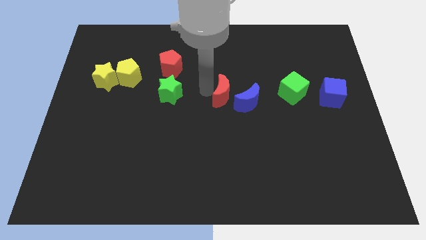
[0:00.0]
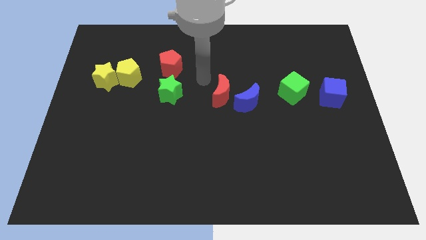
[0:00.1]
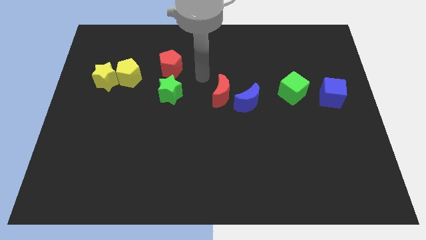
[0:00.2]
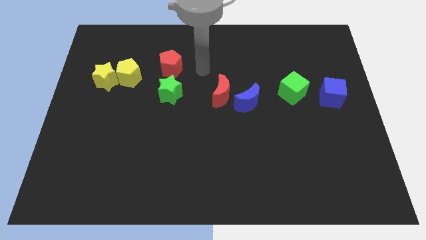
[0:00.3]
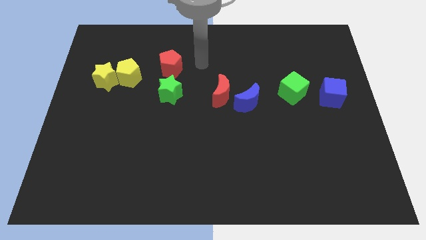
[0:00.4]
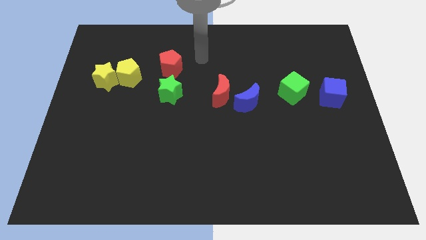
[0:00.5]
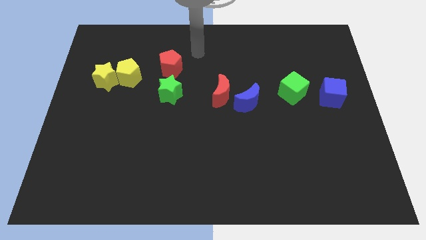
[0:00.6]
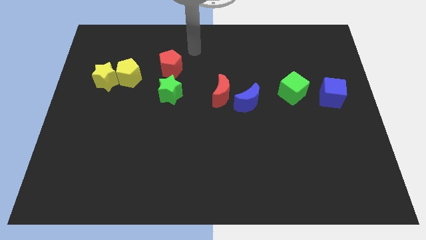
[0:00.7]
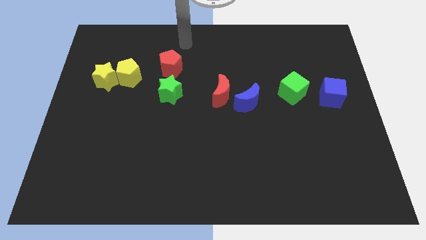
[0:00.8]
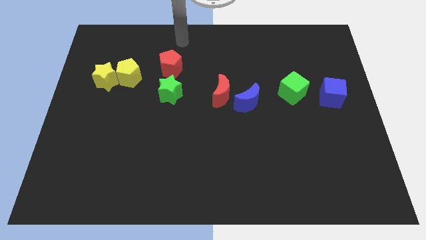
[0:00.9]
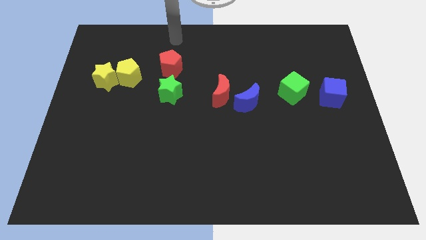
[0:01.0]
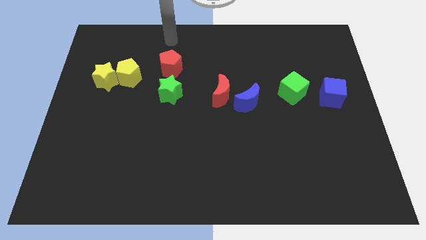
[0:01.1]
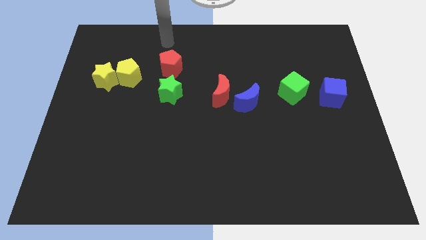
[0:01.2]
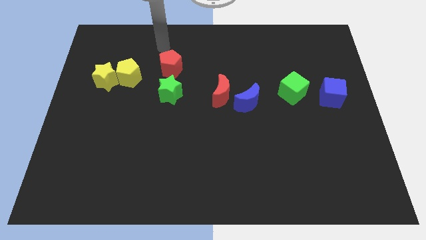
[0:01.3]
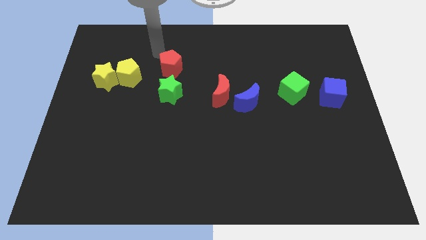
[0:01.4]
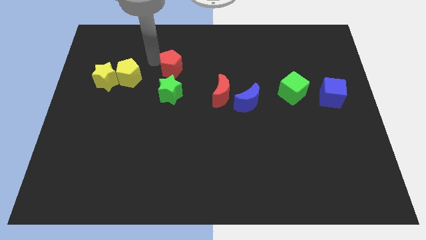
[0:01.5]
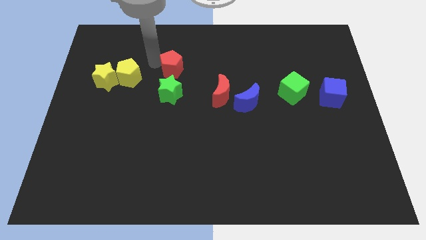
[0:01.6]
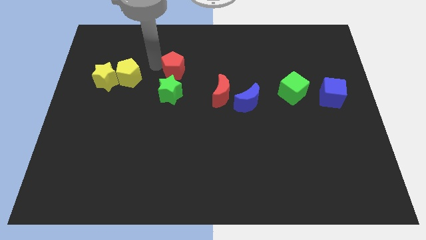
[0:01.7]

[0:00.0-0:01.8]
touch the left side of the red pentagon

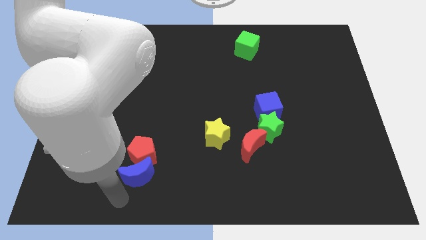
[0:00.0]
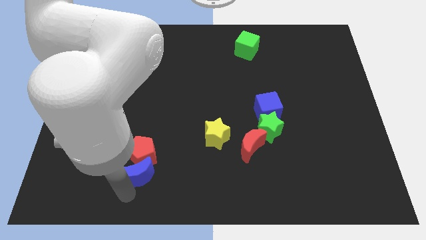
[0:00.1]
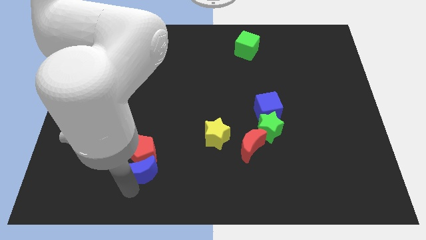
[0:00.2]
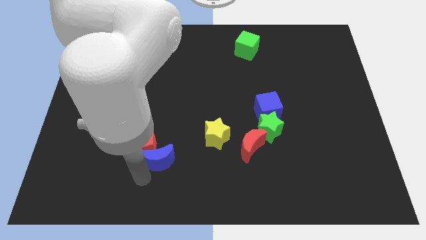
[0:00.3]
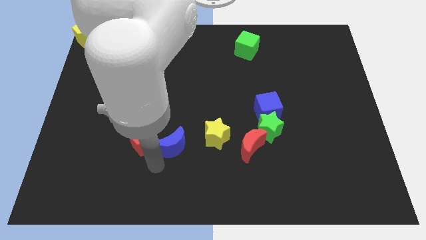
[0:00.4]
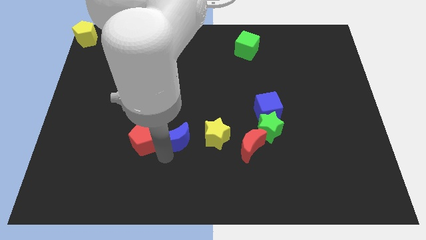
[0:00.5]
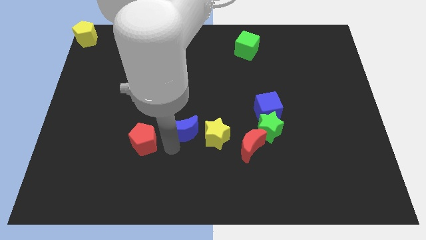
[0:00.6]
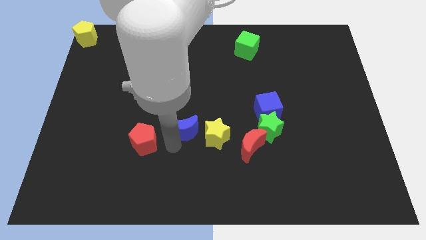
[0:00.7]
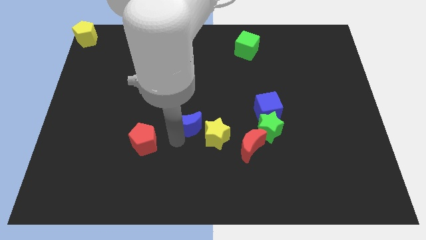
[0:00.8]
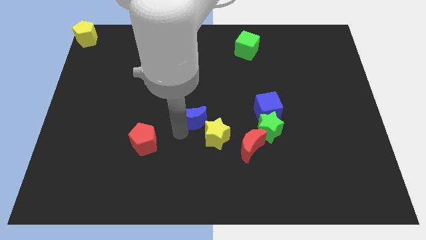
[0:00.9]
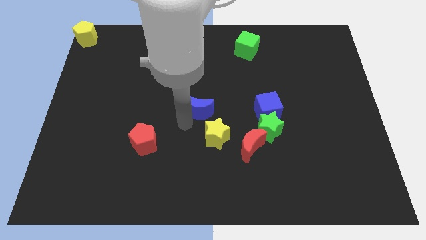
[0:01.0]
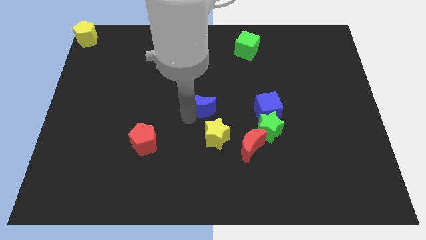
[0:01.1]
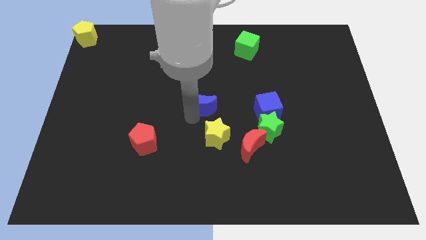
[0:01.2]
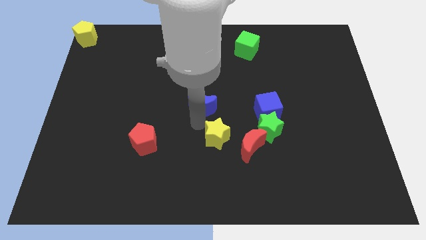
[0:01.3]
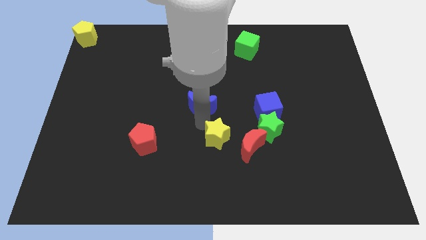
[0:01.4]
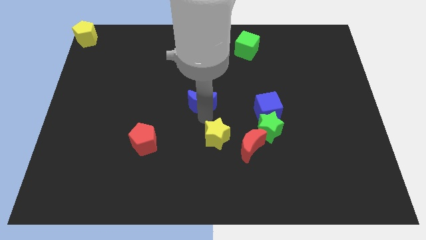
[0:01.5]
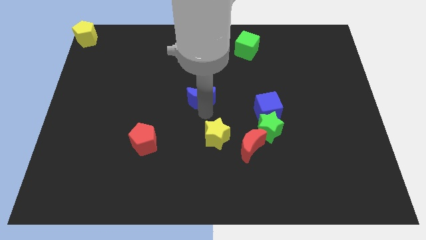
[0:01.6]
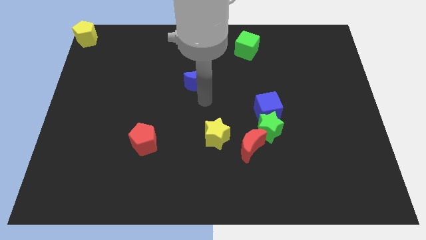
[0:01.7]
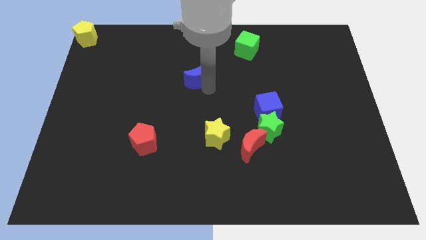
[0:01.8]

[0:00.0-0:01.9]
separate the blue moon from the red pentagon

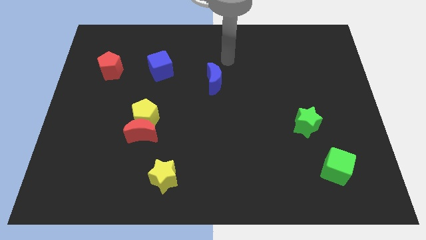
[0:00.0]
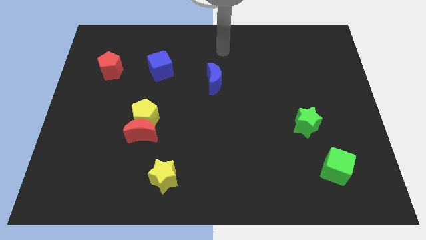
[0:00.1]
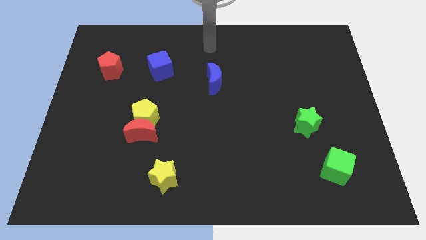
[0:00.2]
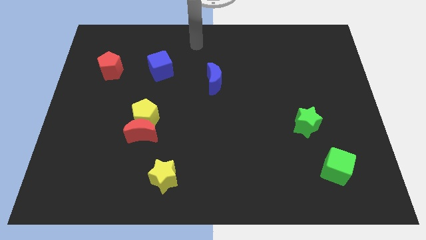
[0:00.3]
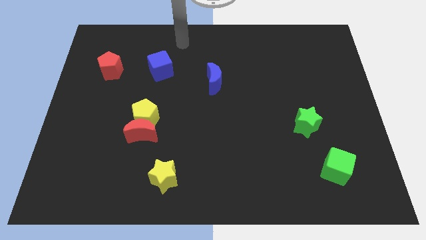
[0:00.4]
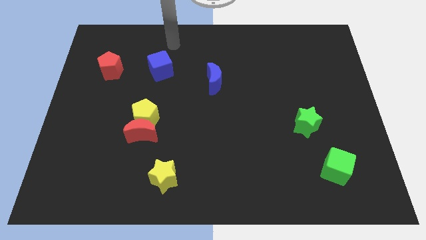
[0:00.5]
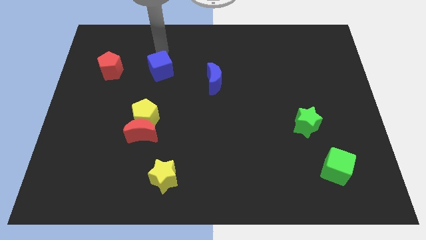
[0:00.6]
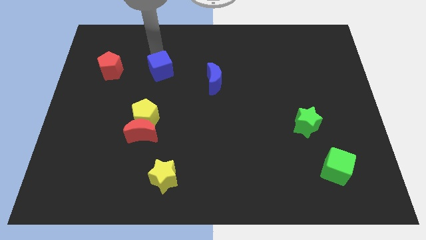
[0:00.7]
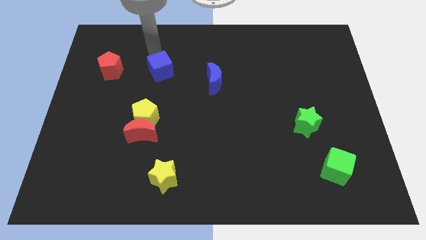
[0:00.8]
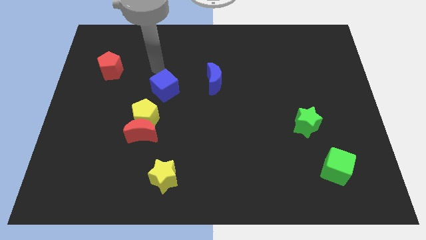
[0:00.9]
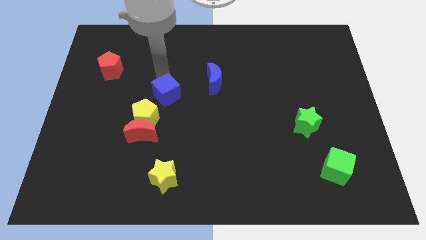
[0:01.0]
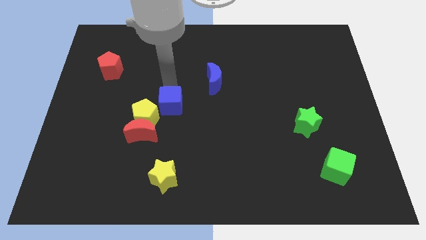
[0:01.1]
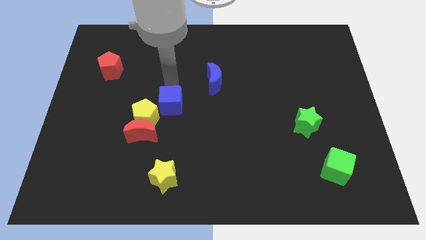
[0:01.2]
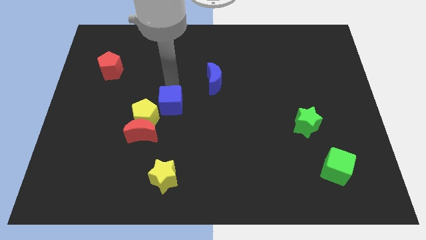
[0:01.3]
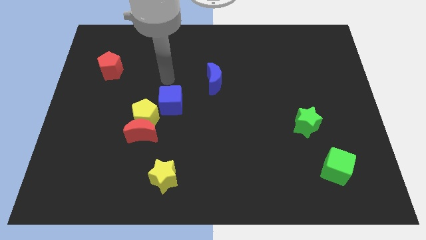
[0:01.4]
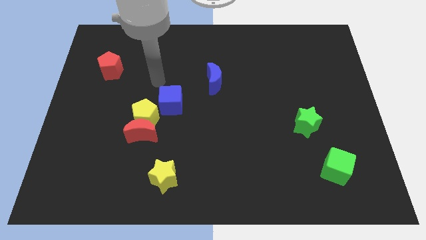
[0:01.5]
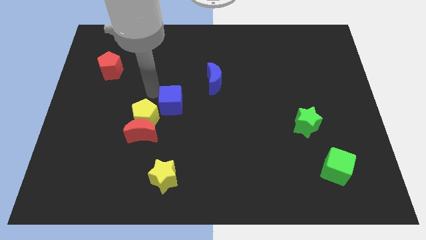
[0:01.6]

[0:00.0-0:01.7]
push the blue cube vertically above yellow star

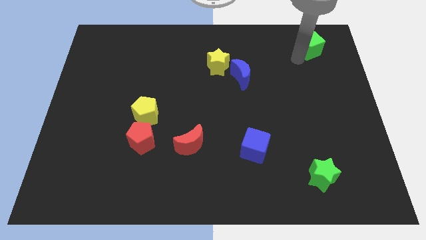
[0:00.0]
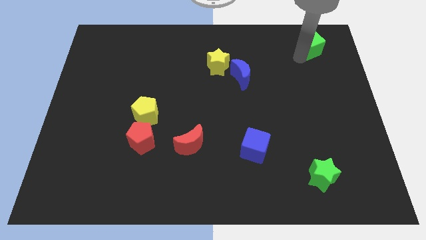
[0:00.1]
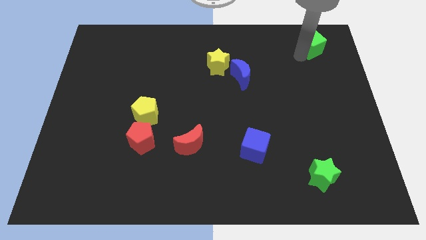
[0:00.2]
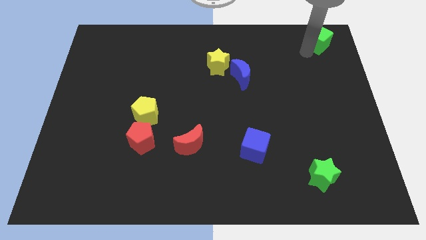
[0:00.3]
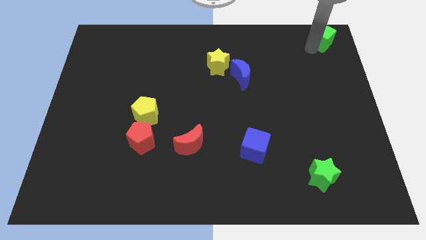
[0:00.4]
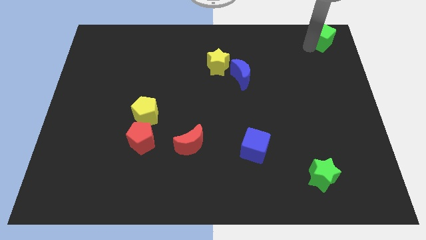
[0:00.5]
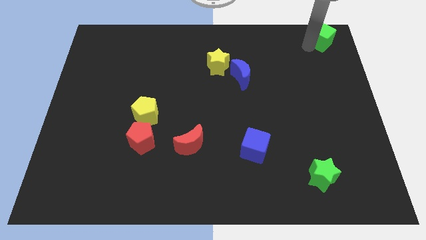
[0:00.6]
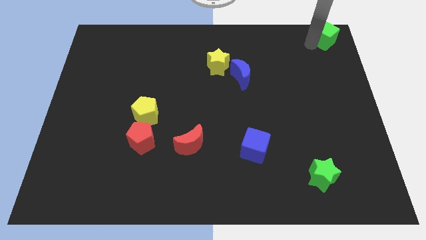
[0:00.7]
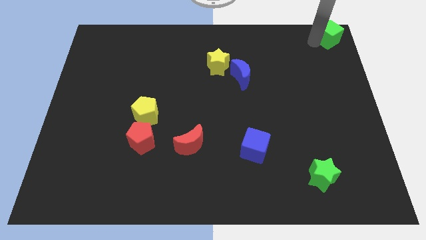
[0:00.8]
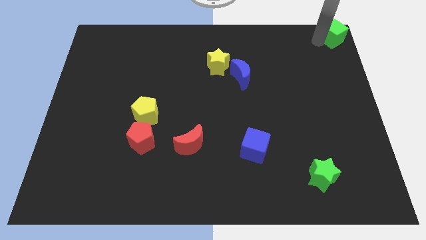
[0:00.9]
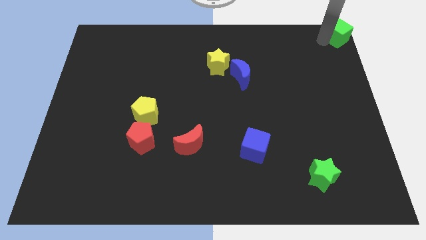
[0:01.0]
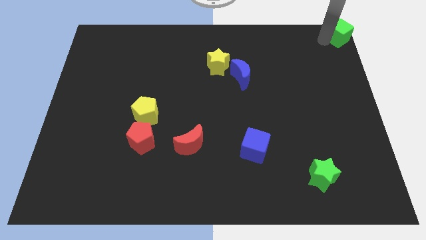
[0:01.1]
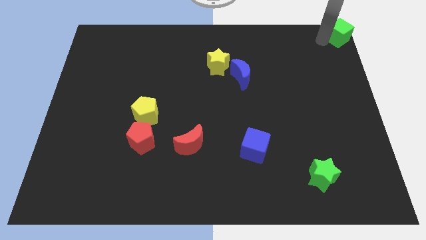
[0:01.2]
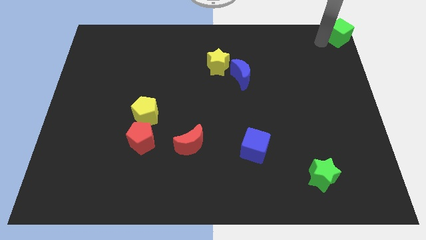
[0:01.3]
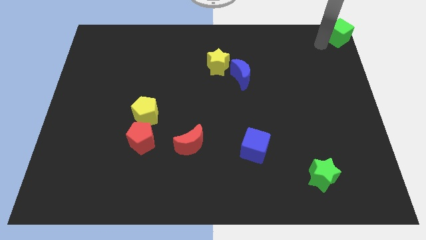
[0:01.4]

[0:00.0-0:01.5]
push the green cube to the top right corner of the board

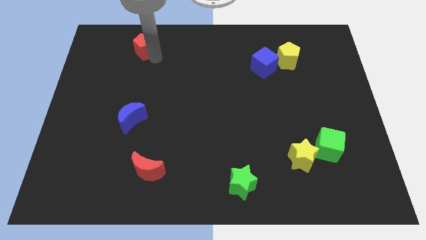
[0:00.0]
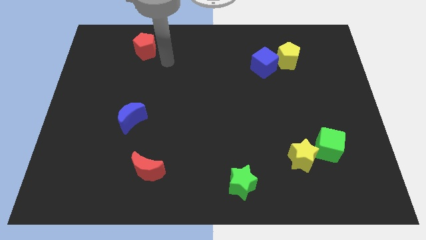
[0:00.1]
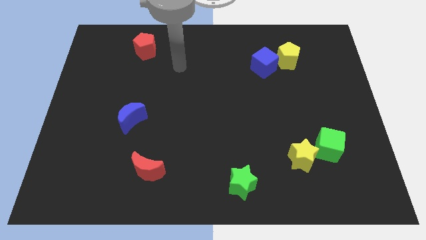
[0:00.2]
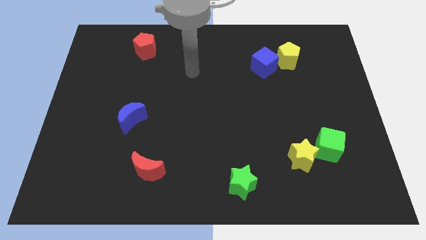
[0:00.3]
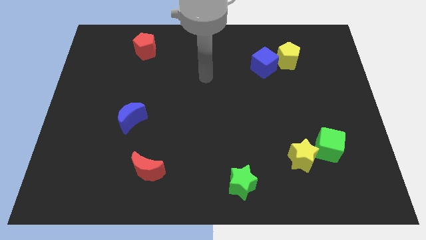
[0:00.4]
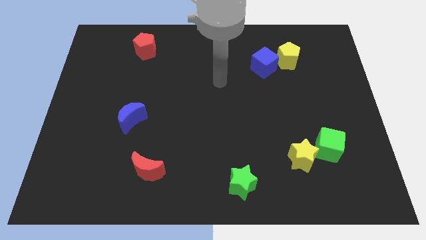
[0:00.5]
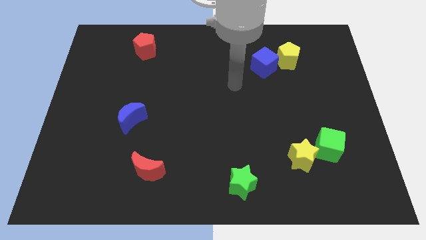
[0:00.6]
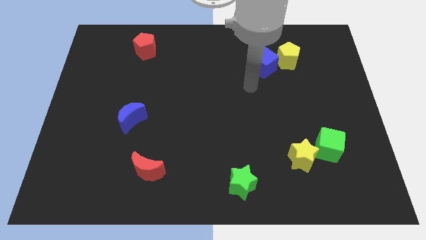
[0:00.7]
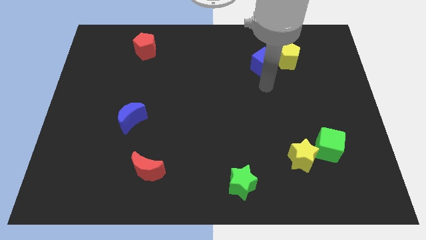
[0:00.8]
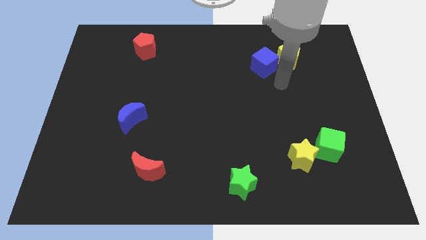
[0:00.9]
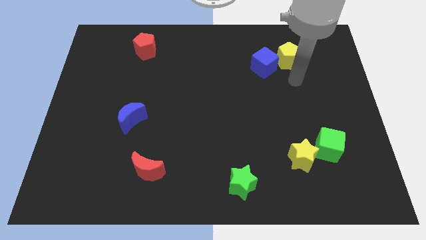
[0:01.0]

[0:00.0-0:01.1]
move your arm towards the right side of the board

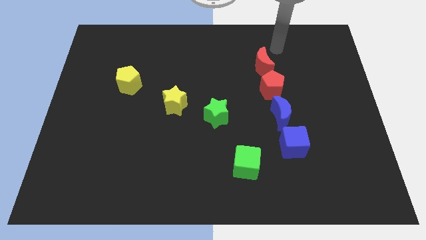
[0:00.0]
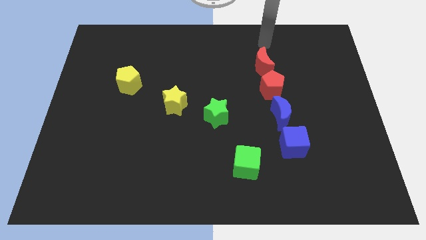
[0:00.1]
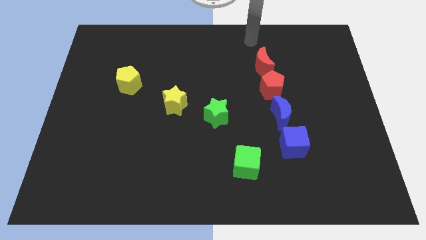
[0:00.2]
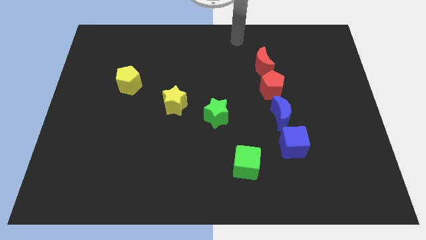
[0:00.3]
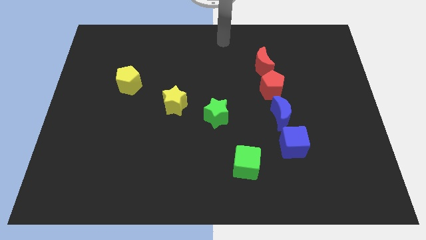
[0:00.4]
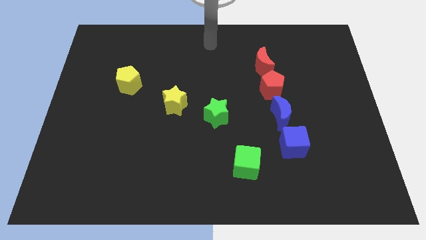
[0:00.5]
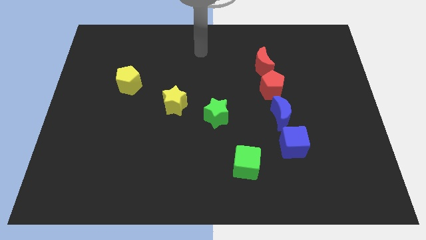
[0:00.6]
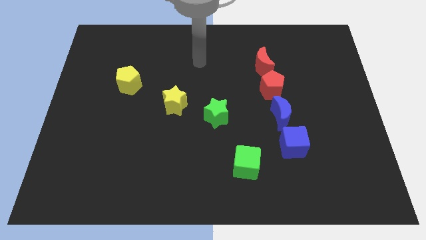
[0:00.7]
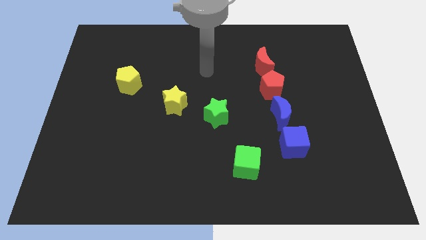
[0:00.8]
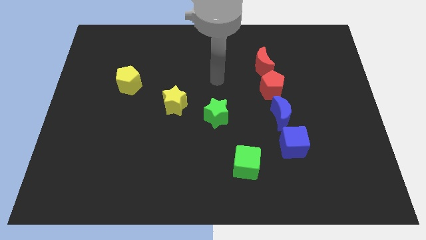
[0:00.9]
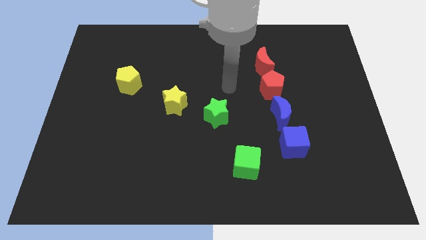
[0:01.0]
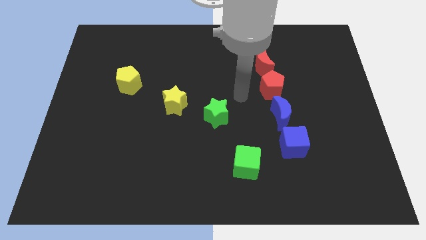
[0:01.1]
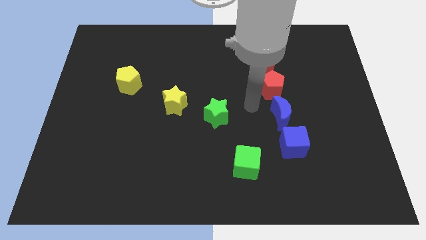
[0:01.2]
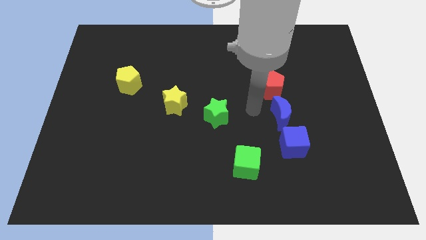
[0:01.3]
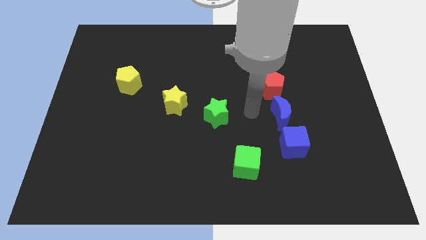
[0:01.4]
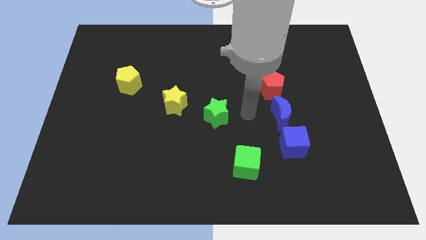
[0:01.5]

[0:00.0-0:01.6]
place your arm to the right side of the green star
